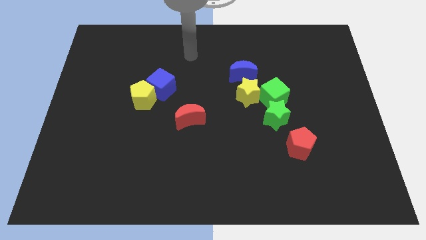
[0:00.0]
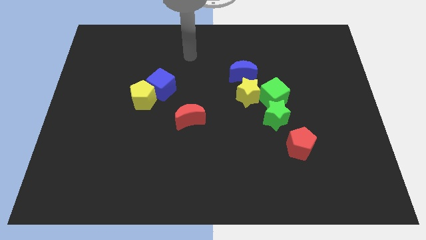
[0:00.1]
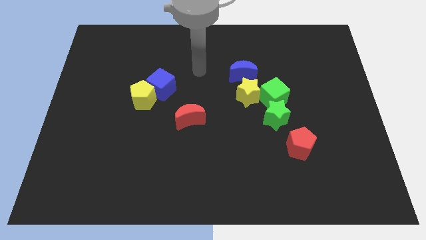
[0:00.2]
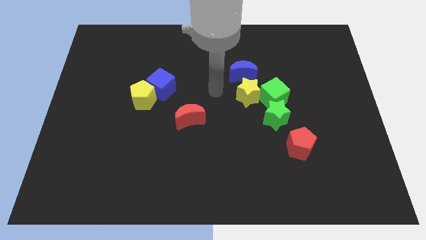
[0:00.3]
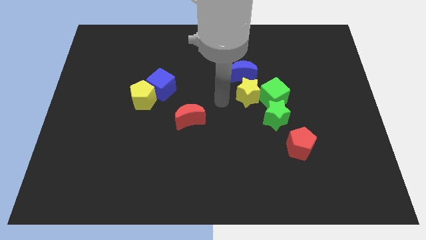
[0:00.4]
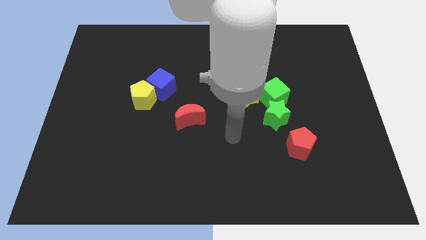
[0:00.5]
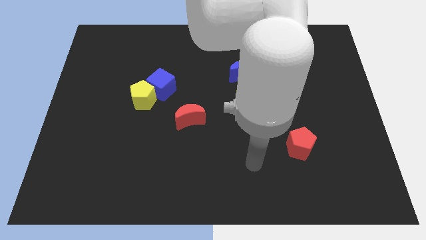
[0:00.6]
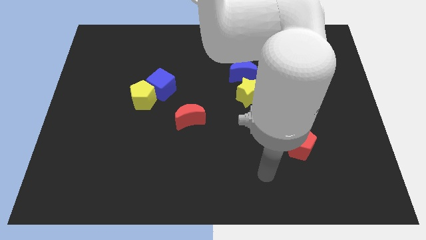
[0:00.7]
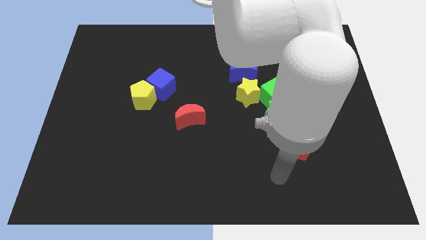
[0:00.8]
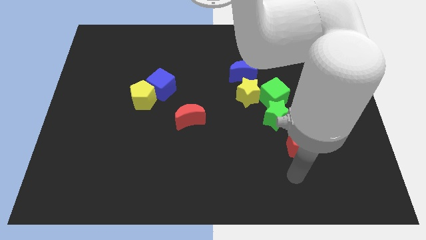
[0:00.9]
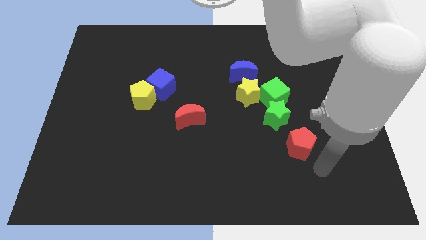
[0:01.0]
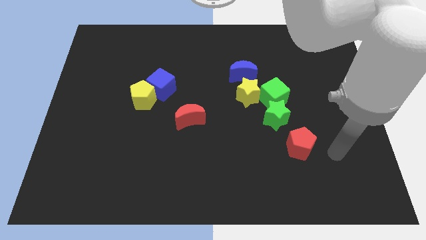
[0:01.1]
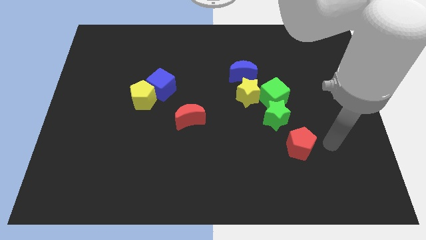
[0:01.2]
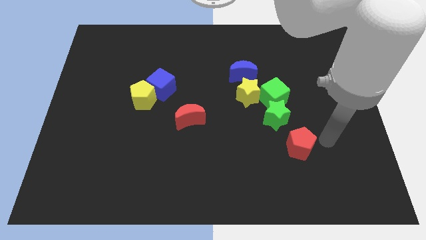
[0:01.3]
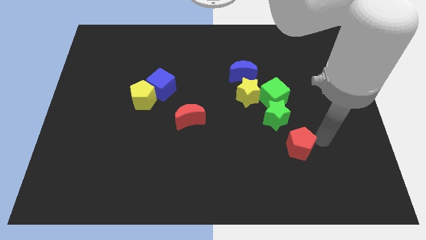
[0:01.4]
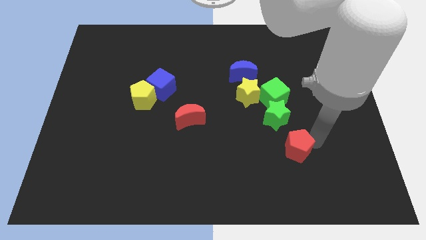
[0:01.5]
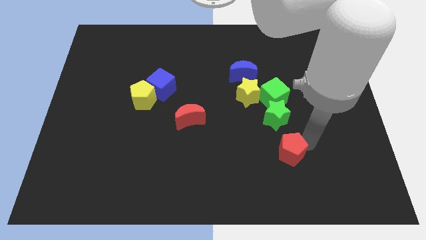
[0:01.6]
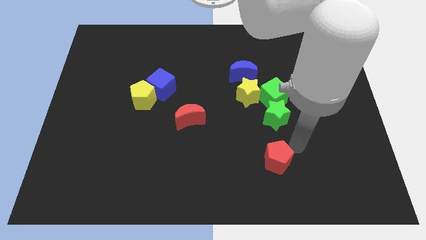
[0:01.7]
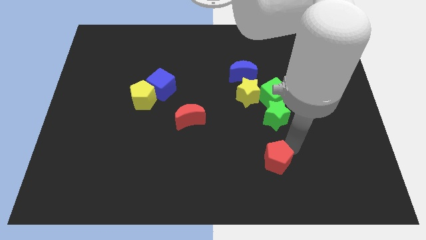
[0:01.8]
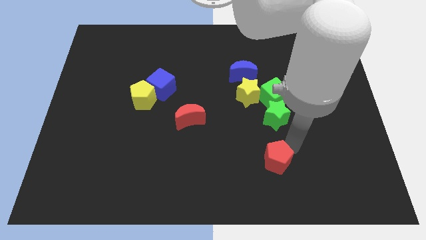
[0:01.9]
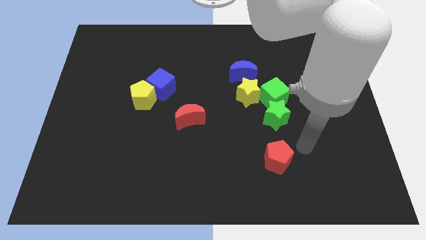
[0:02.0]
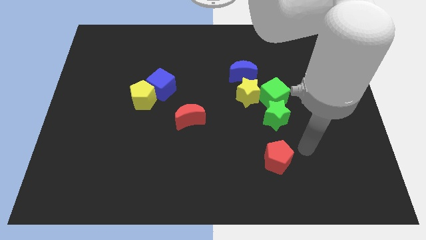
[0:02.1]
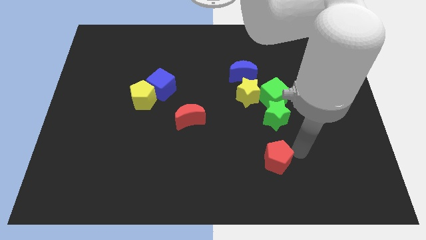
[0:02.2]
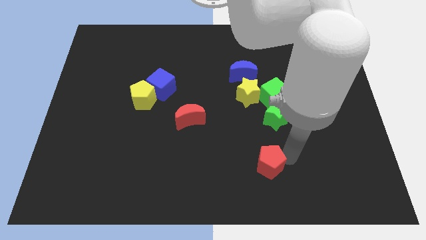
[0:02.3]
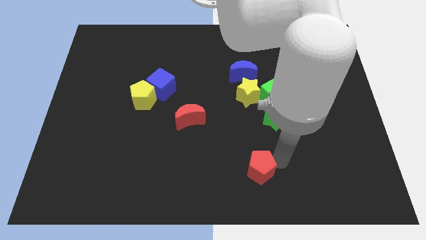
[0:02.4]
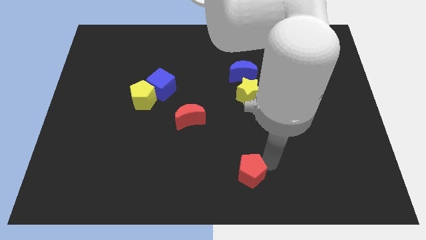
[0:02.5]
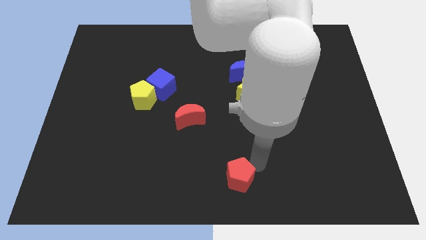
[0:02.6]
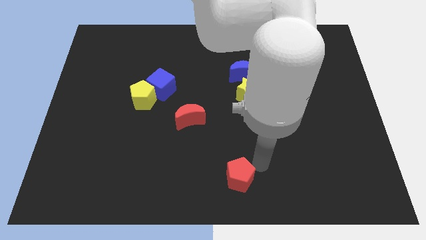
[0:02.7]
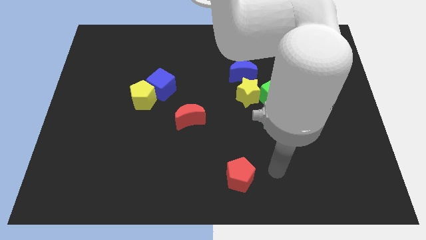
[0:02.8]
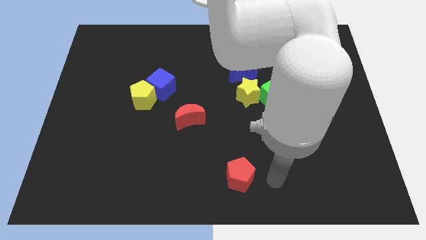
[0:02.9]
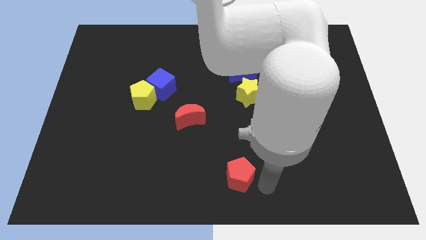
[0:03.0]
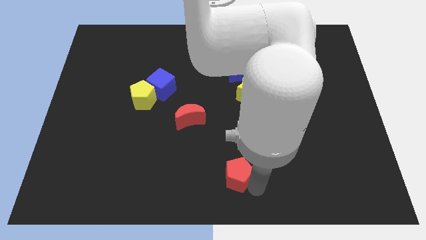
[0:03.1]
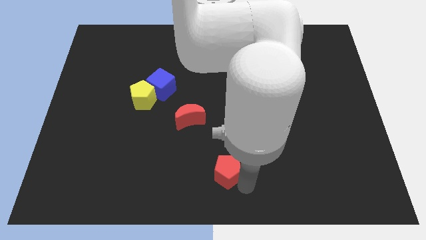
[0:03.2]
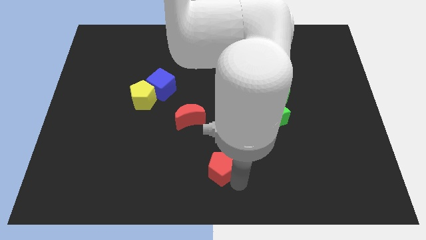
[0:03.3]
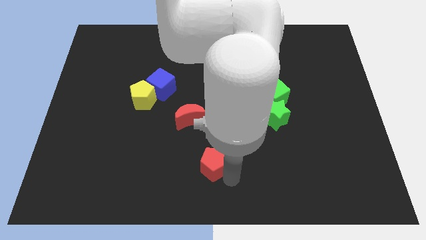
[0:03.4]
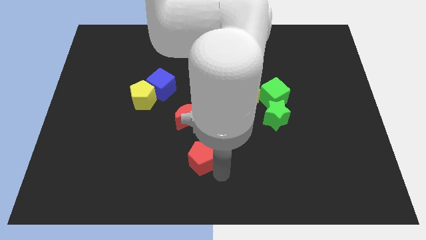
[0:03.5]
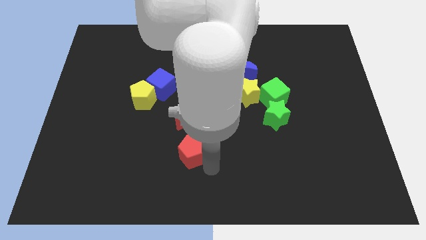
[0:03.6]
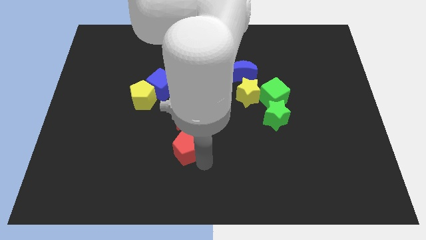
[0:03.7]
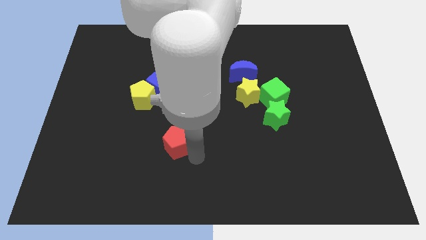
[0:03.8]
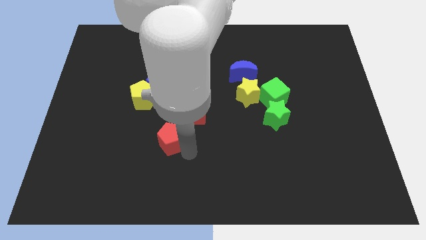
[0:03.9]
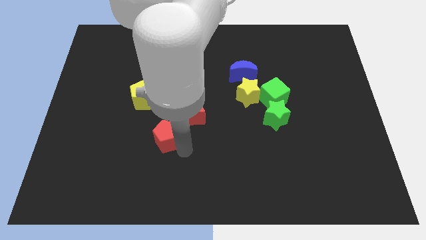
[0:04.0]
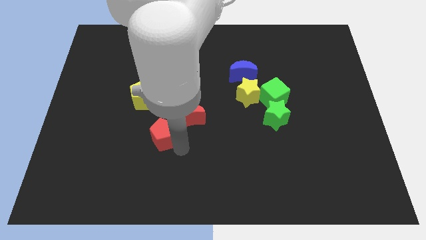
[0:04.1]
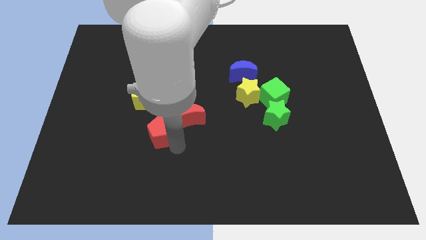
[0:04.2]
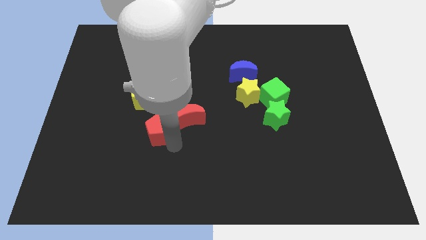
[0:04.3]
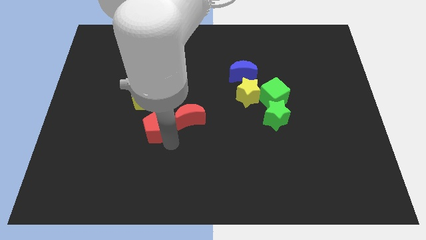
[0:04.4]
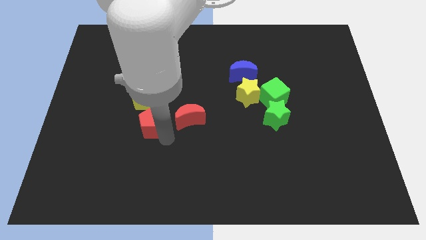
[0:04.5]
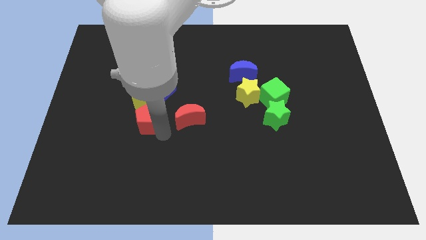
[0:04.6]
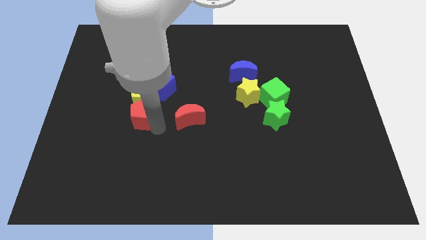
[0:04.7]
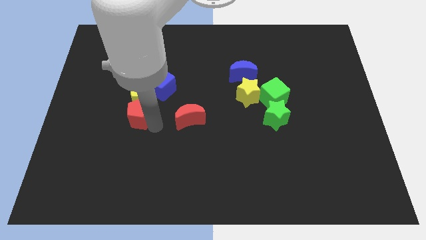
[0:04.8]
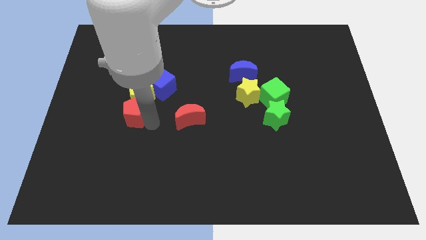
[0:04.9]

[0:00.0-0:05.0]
put the red pentagon to the yellow pentagon

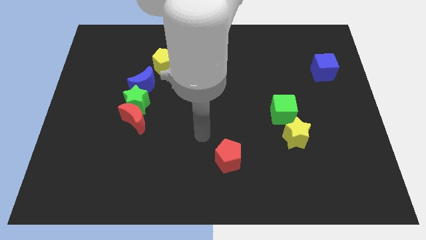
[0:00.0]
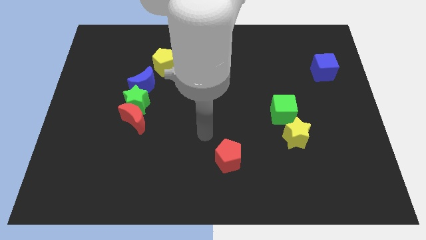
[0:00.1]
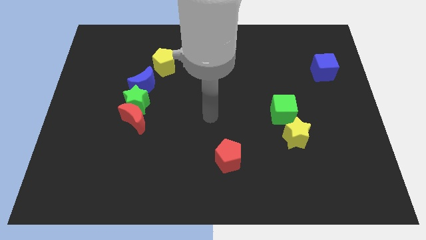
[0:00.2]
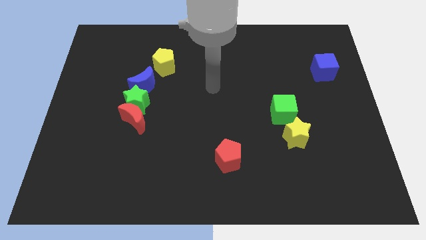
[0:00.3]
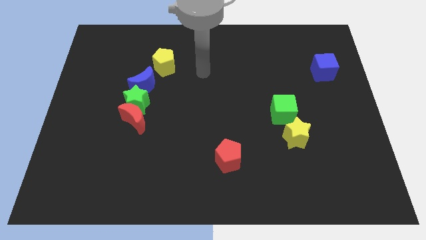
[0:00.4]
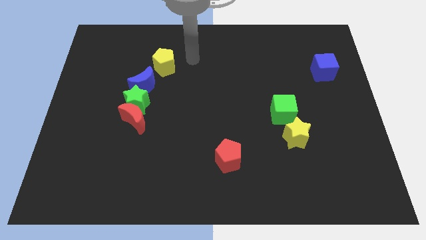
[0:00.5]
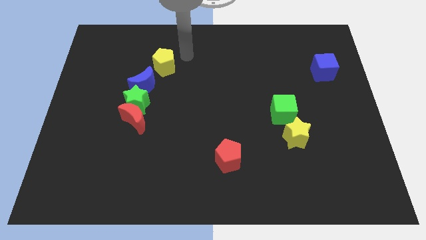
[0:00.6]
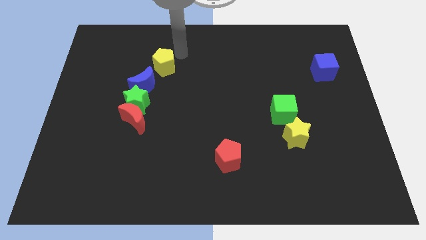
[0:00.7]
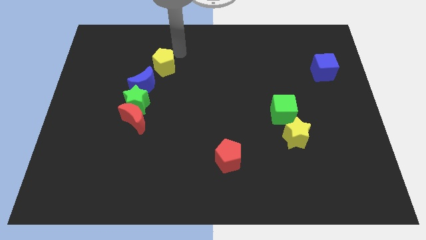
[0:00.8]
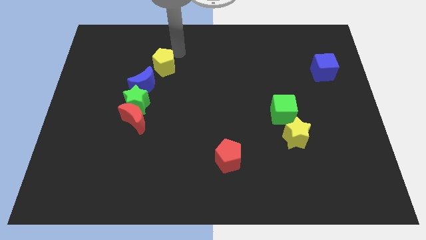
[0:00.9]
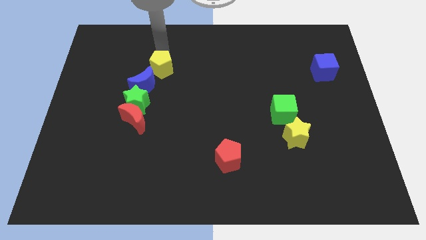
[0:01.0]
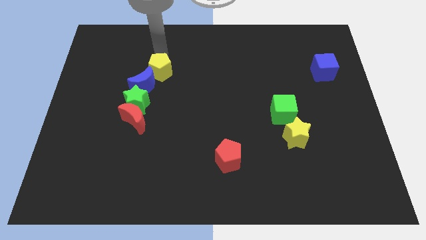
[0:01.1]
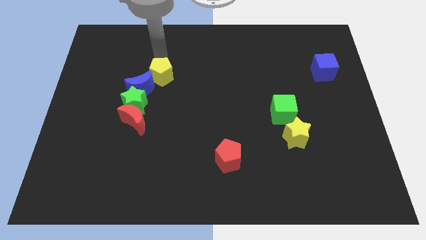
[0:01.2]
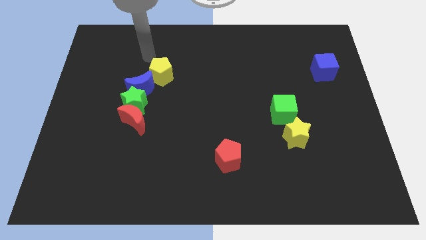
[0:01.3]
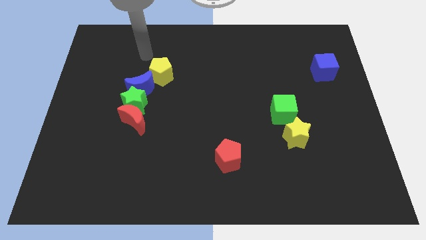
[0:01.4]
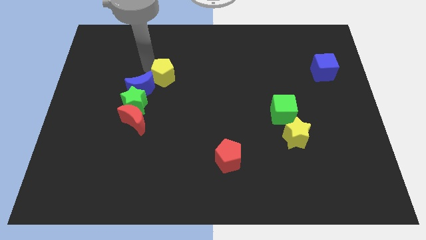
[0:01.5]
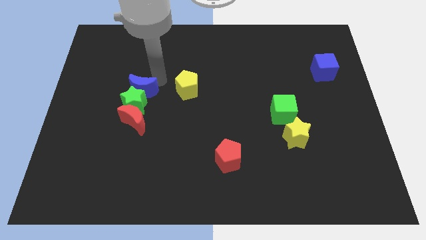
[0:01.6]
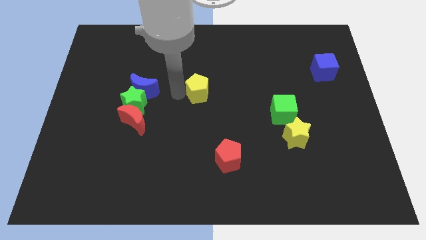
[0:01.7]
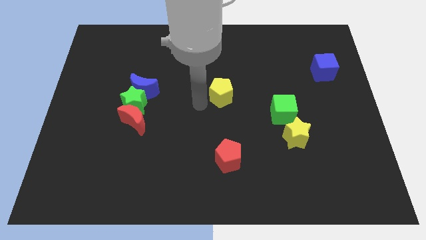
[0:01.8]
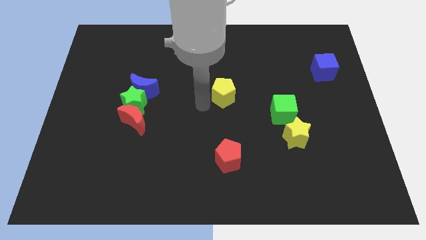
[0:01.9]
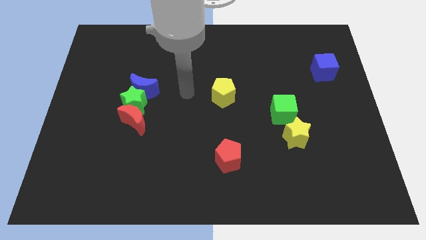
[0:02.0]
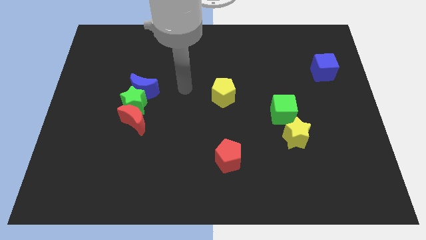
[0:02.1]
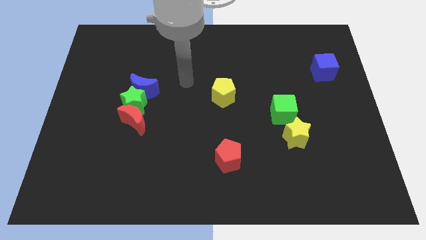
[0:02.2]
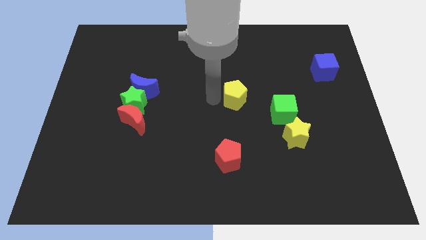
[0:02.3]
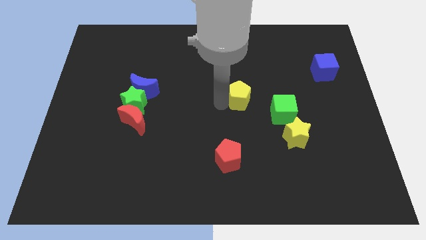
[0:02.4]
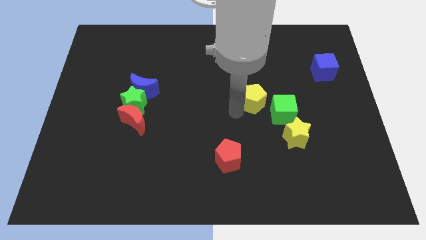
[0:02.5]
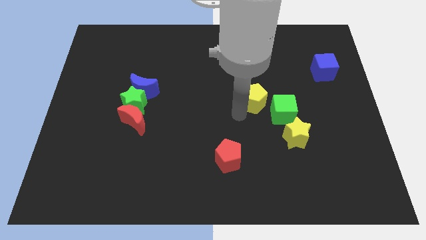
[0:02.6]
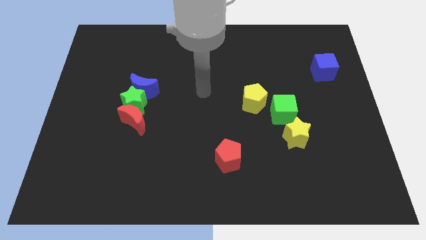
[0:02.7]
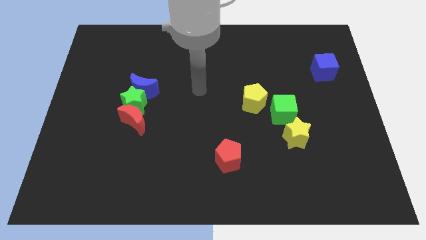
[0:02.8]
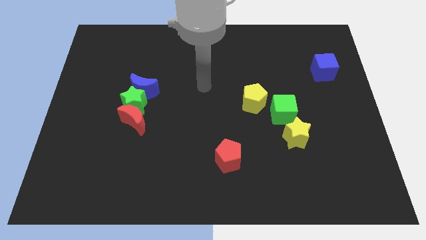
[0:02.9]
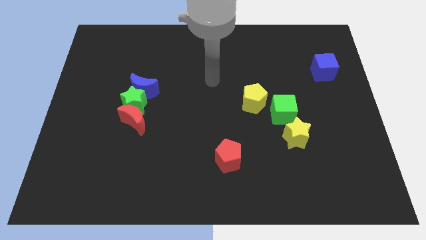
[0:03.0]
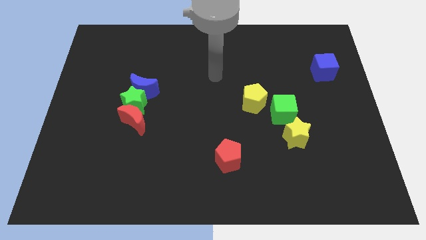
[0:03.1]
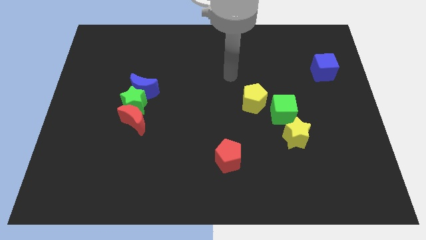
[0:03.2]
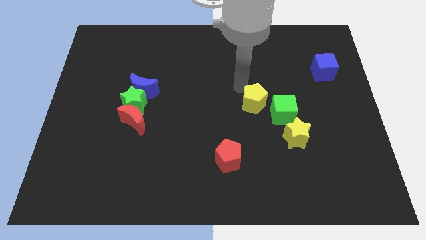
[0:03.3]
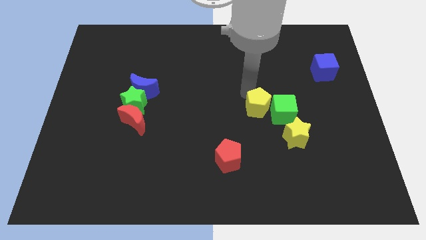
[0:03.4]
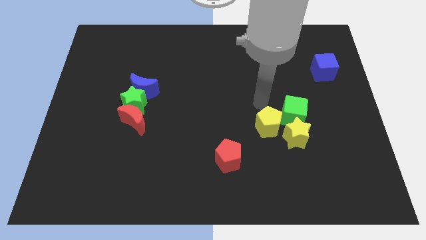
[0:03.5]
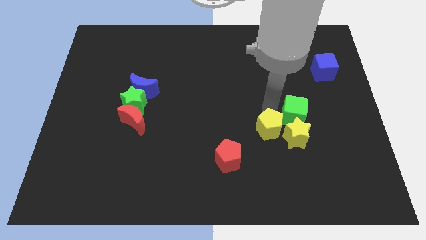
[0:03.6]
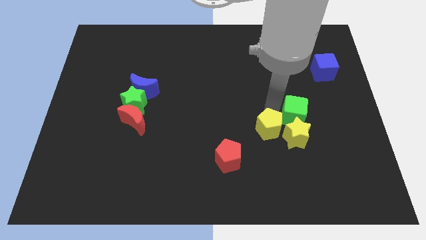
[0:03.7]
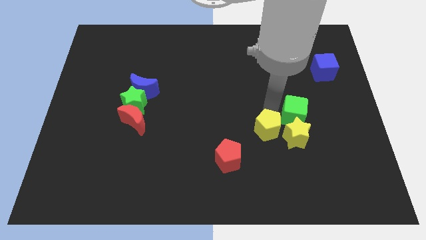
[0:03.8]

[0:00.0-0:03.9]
move the yellow pentagon next to the yellow star

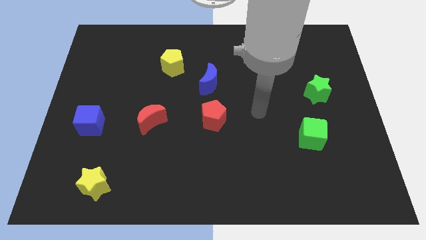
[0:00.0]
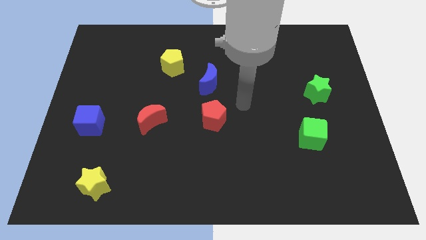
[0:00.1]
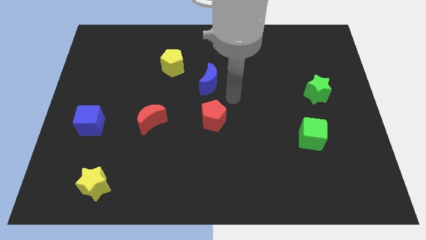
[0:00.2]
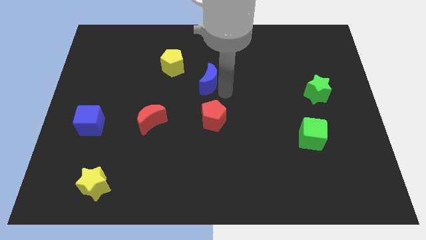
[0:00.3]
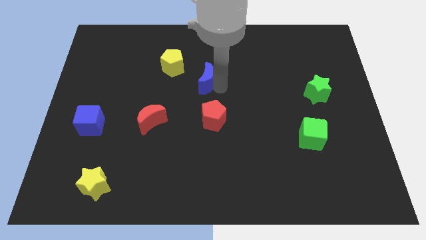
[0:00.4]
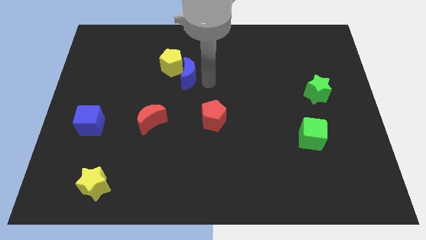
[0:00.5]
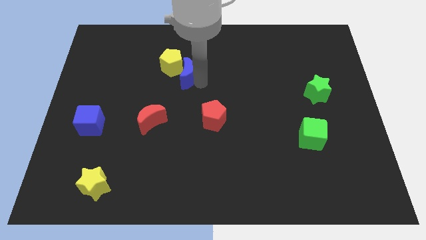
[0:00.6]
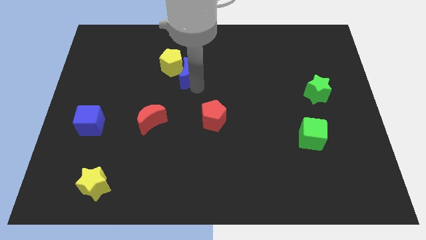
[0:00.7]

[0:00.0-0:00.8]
slide the blue moon towards the yellow pentagon
